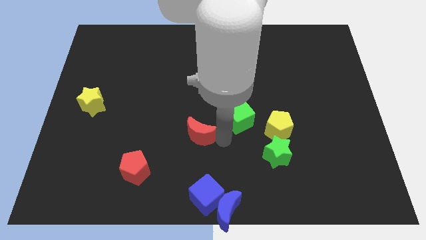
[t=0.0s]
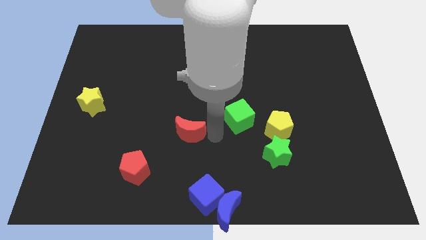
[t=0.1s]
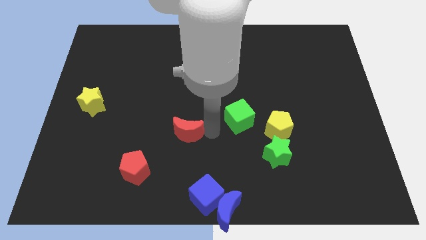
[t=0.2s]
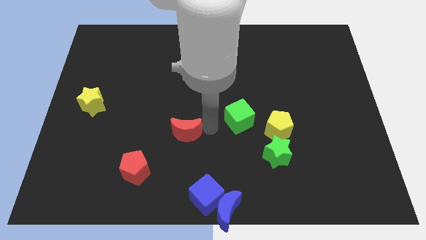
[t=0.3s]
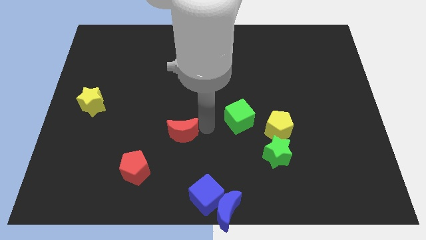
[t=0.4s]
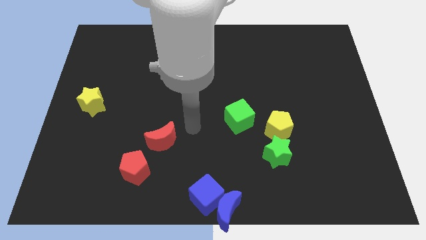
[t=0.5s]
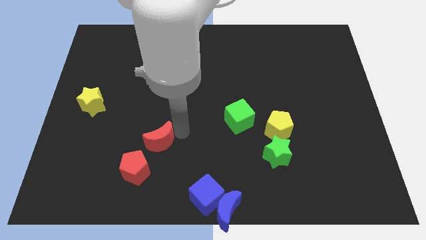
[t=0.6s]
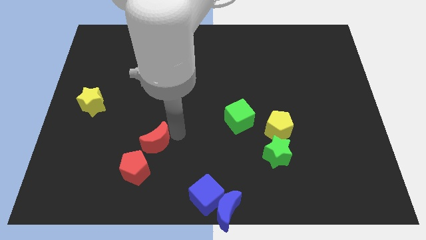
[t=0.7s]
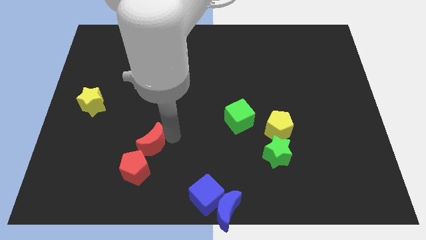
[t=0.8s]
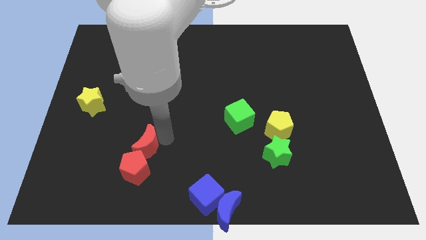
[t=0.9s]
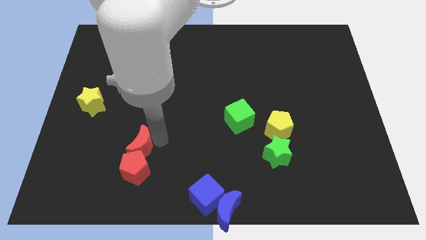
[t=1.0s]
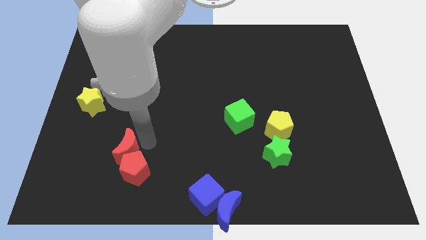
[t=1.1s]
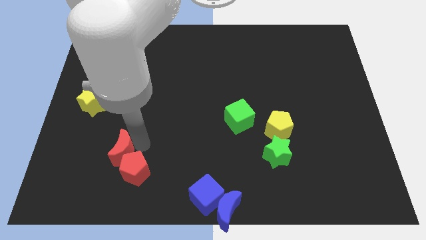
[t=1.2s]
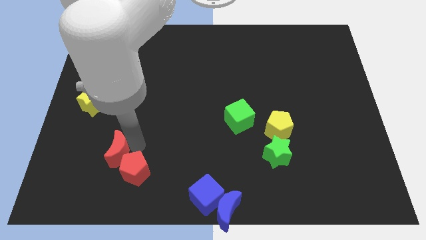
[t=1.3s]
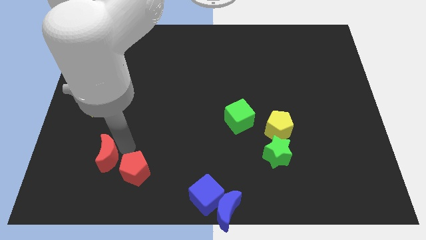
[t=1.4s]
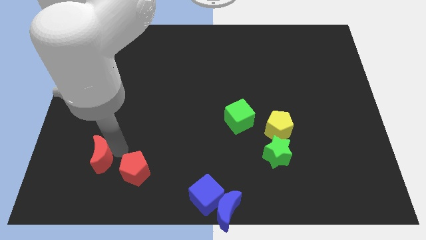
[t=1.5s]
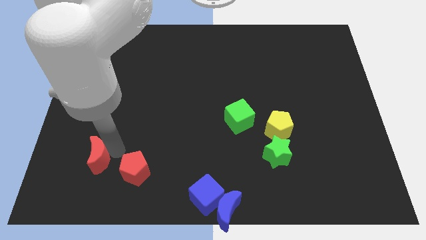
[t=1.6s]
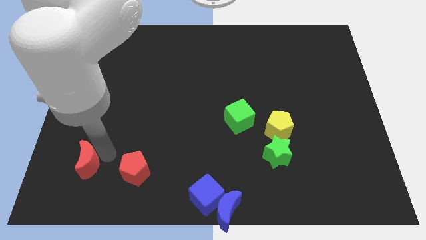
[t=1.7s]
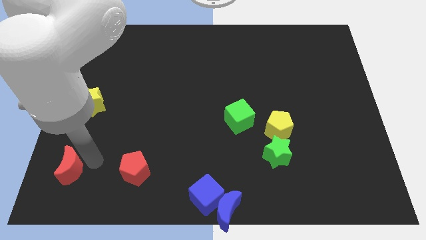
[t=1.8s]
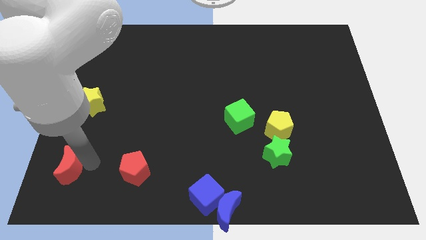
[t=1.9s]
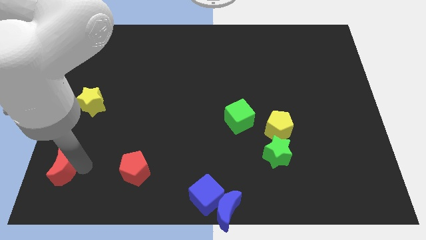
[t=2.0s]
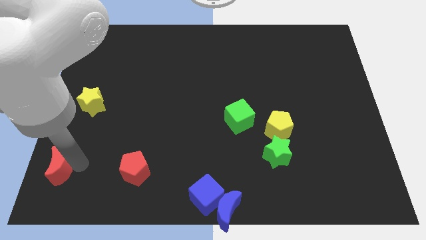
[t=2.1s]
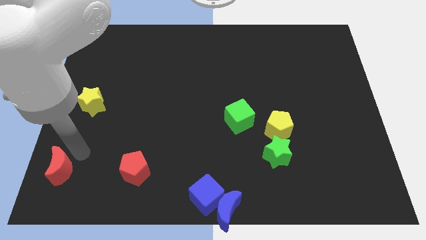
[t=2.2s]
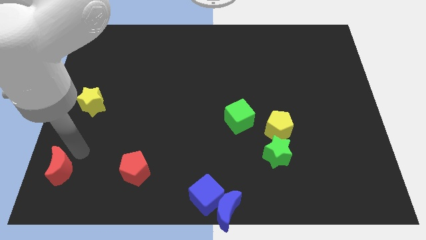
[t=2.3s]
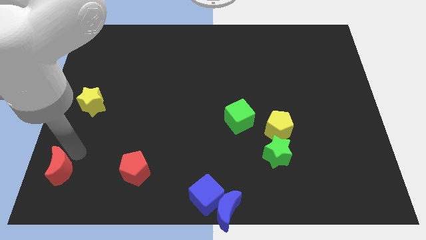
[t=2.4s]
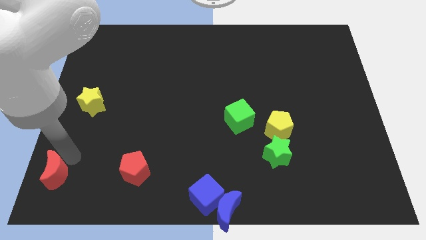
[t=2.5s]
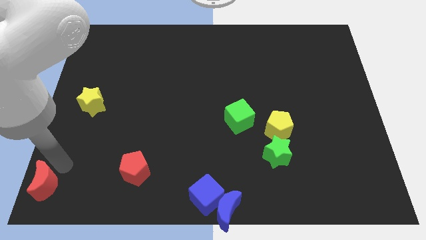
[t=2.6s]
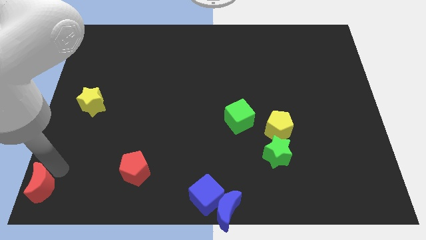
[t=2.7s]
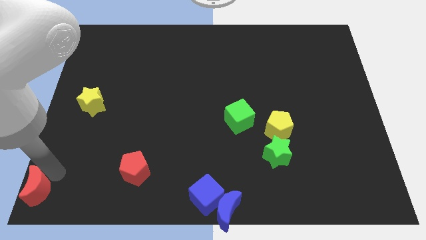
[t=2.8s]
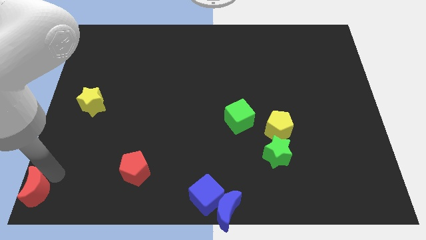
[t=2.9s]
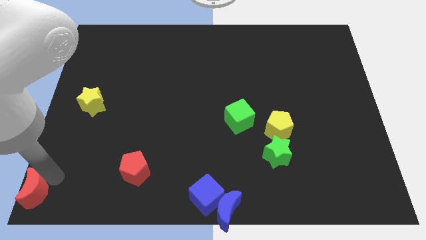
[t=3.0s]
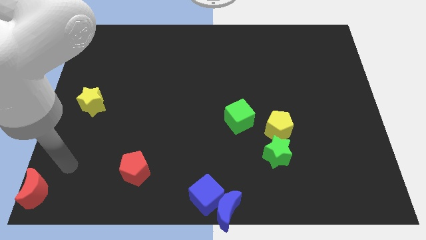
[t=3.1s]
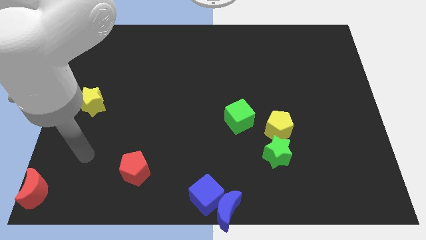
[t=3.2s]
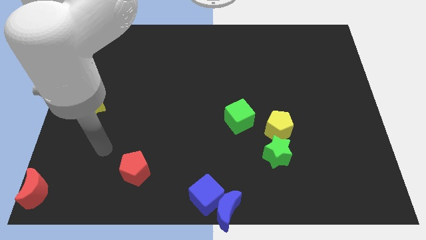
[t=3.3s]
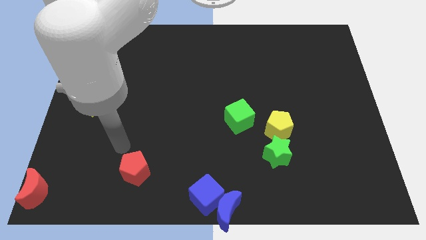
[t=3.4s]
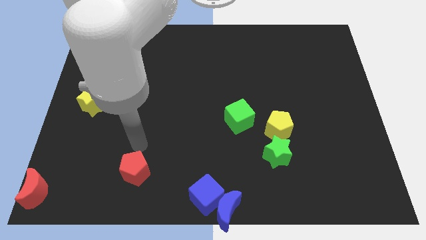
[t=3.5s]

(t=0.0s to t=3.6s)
slide the red moon to the bottom left corner of the board

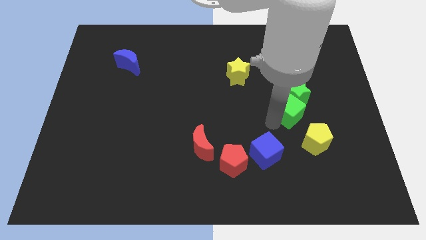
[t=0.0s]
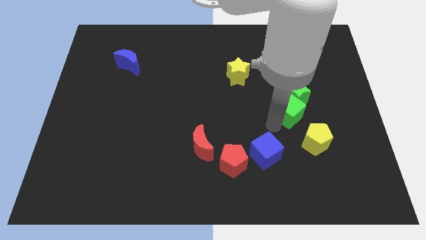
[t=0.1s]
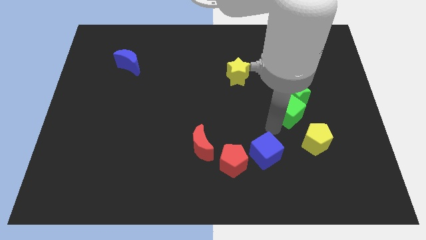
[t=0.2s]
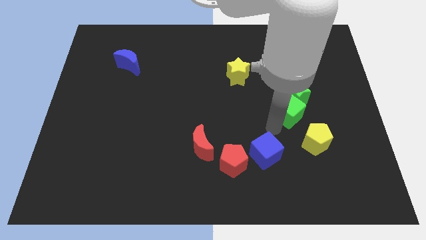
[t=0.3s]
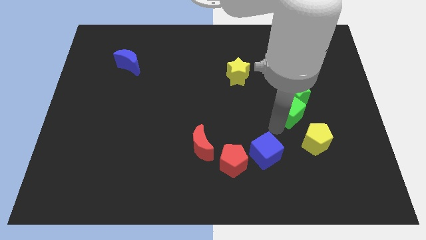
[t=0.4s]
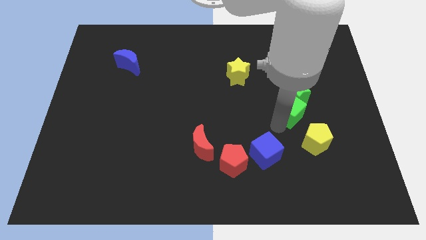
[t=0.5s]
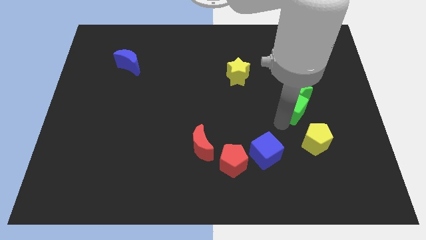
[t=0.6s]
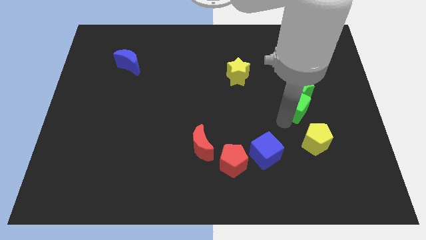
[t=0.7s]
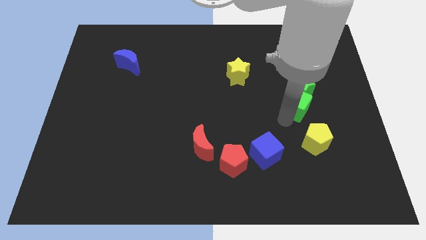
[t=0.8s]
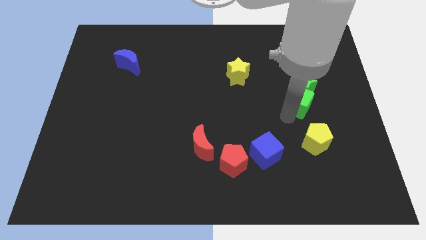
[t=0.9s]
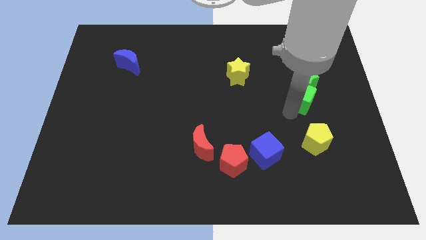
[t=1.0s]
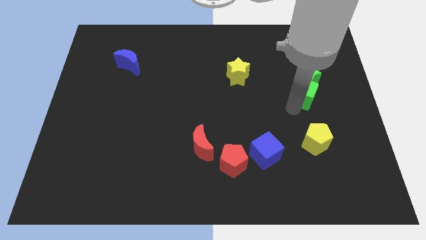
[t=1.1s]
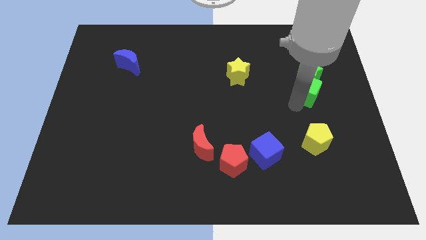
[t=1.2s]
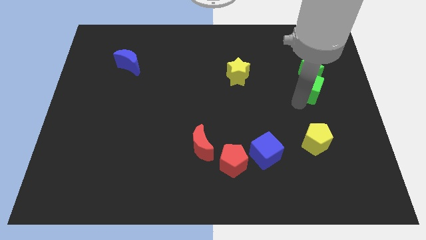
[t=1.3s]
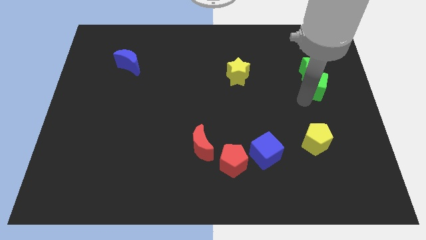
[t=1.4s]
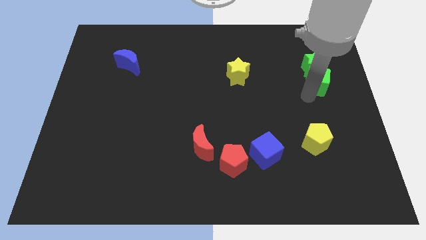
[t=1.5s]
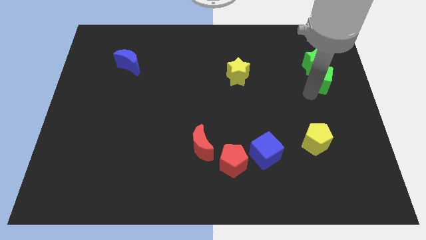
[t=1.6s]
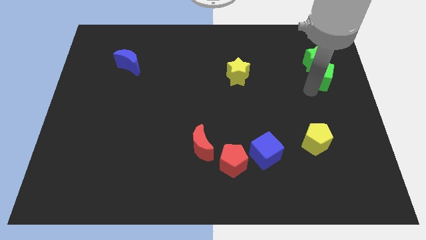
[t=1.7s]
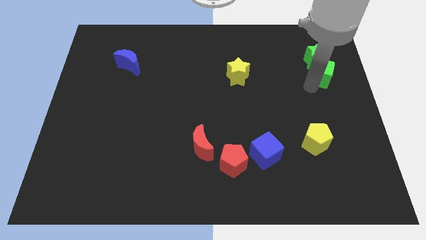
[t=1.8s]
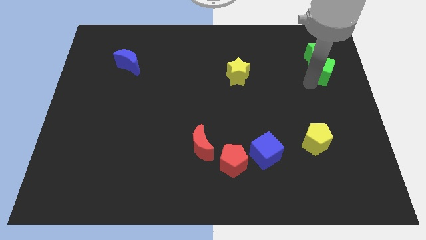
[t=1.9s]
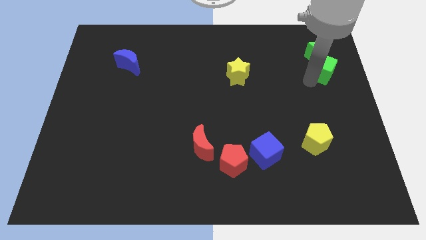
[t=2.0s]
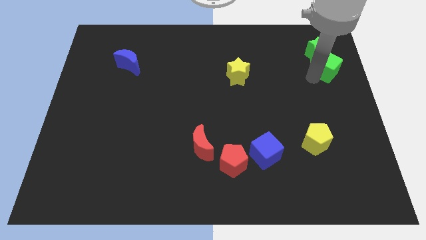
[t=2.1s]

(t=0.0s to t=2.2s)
move the green cube to the vertical top right side of the yellow pentagon

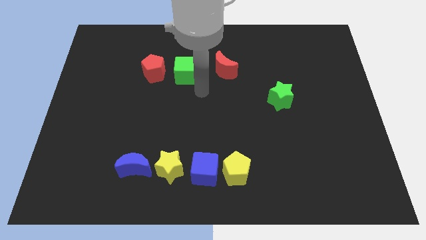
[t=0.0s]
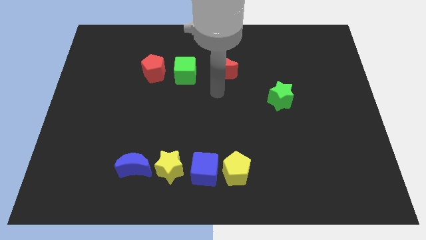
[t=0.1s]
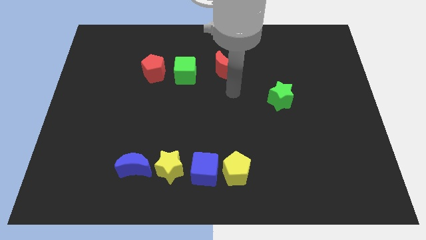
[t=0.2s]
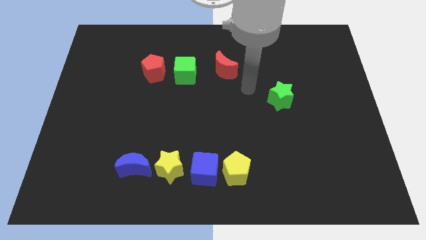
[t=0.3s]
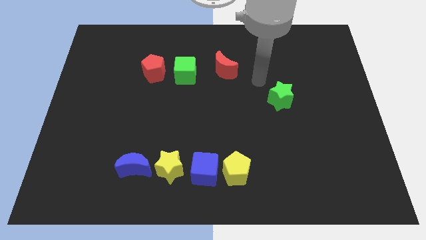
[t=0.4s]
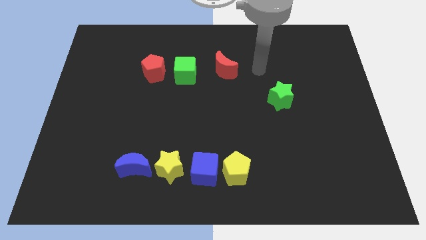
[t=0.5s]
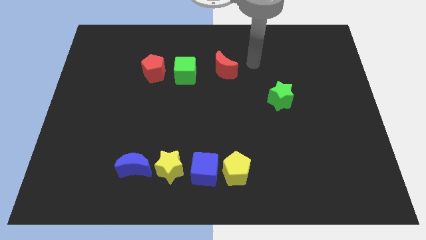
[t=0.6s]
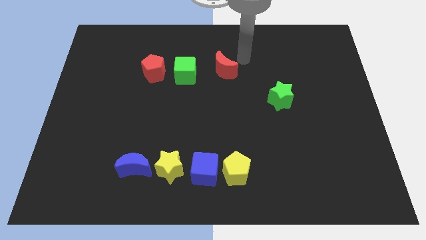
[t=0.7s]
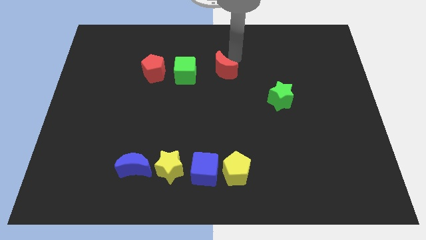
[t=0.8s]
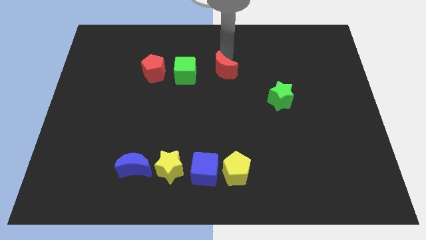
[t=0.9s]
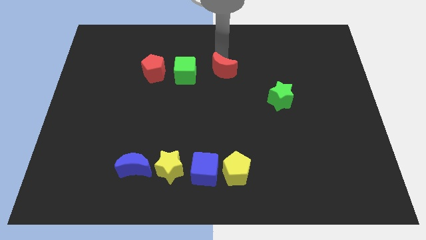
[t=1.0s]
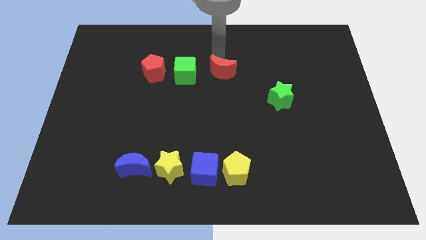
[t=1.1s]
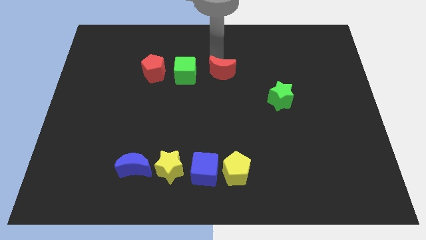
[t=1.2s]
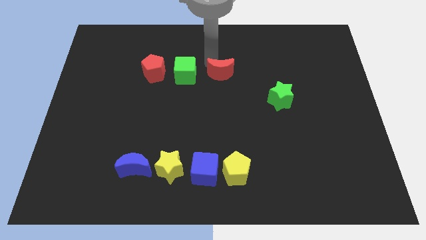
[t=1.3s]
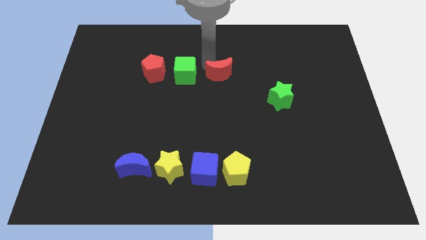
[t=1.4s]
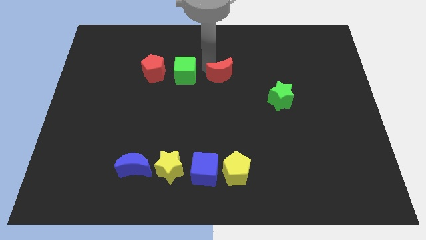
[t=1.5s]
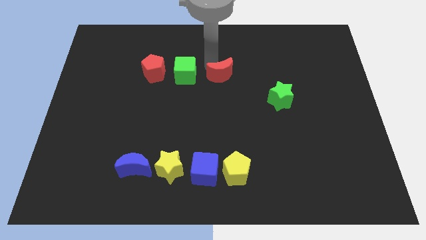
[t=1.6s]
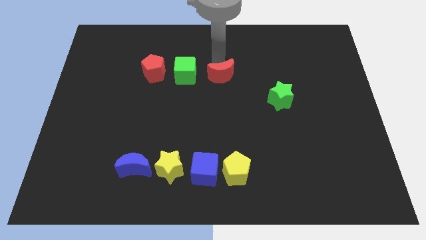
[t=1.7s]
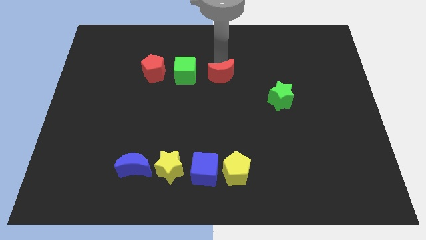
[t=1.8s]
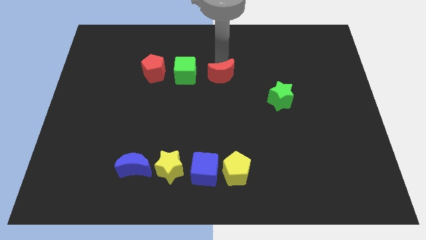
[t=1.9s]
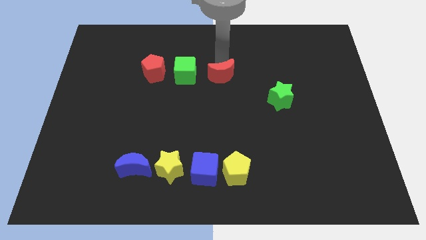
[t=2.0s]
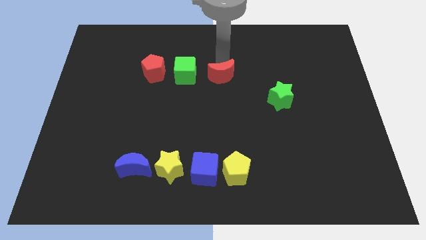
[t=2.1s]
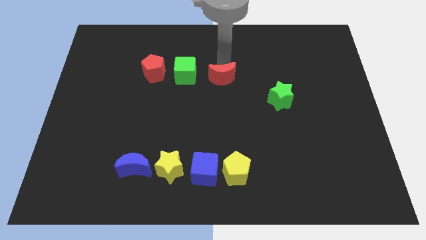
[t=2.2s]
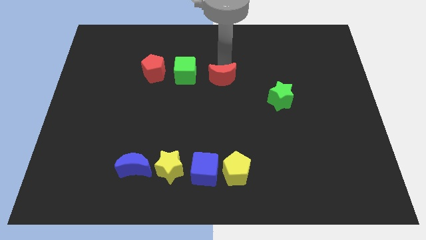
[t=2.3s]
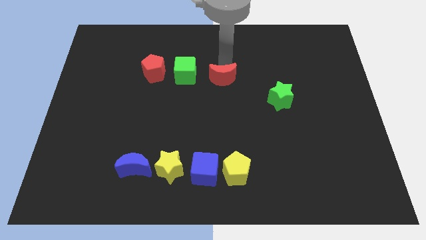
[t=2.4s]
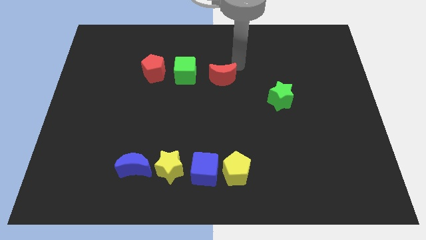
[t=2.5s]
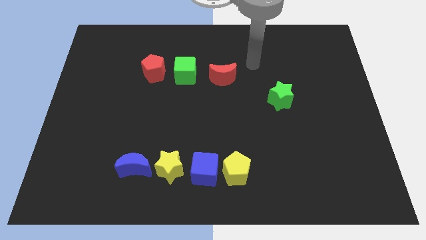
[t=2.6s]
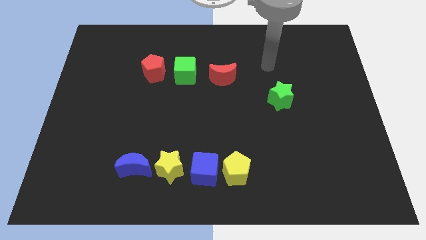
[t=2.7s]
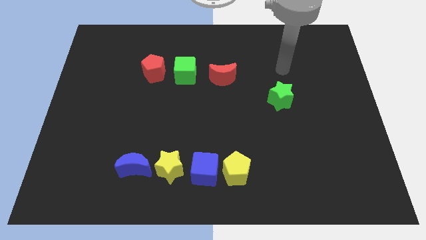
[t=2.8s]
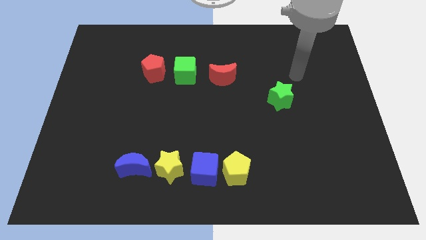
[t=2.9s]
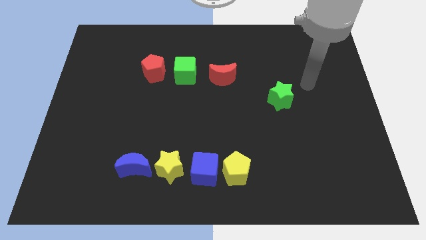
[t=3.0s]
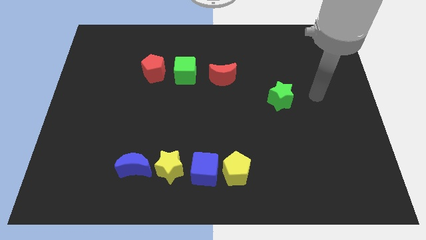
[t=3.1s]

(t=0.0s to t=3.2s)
push red crescent slightly downwards
